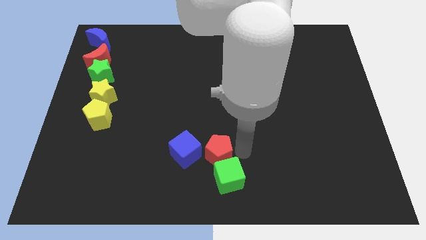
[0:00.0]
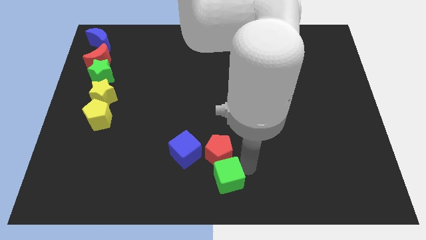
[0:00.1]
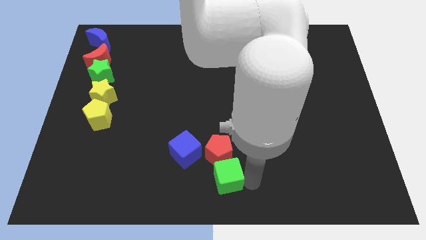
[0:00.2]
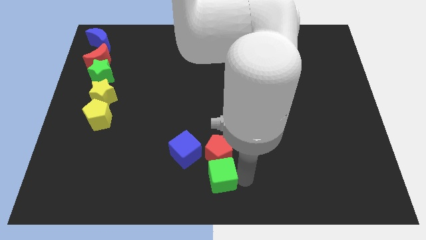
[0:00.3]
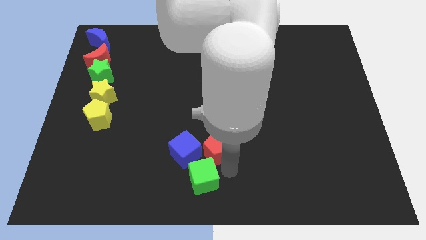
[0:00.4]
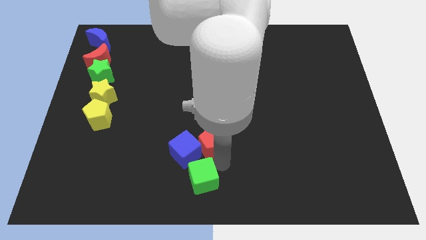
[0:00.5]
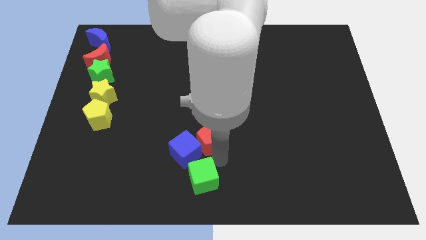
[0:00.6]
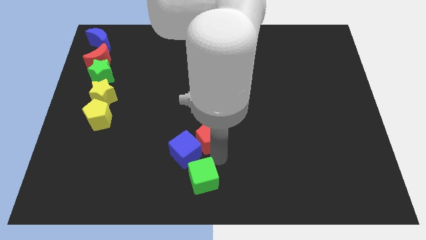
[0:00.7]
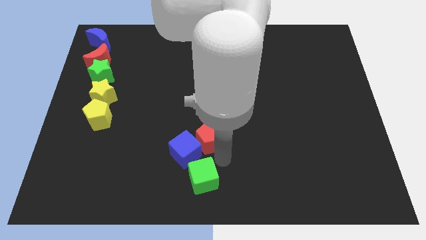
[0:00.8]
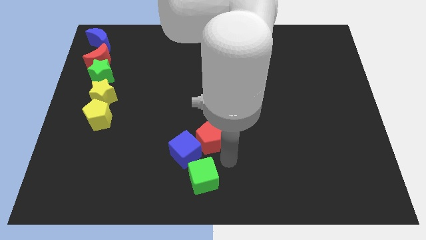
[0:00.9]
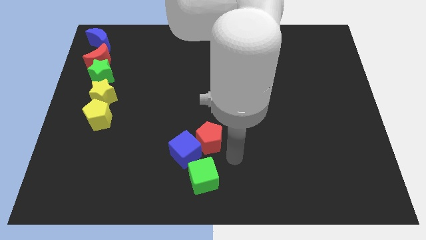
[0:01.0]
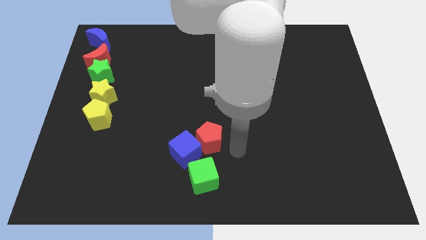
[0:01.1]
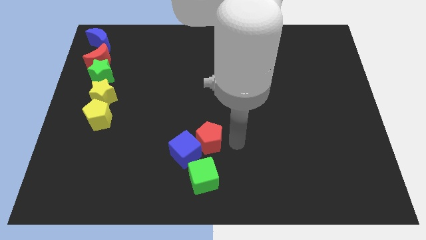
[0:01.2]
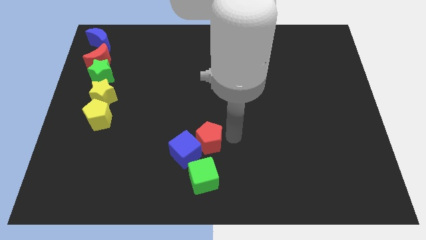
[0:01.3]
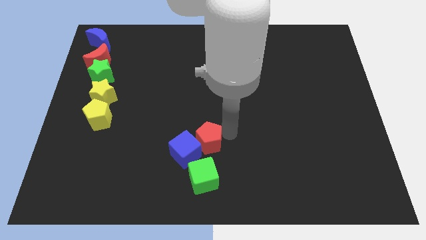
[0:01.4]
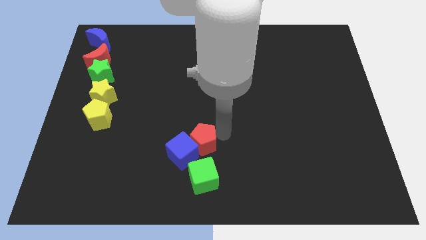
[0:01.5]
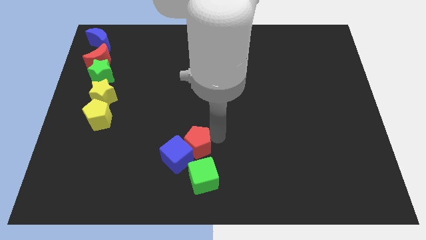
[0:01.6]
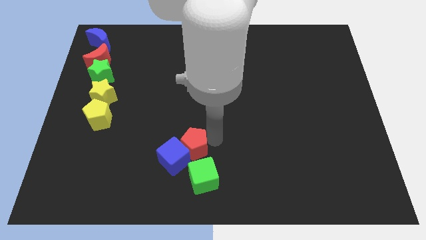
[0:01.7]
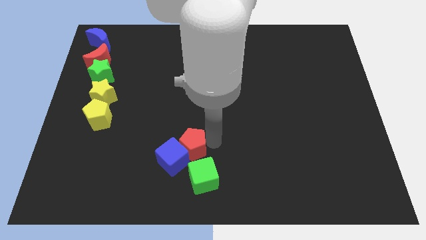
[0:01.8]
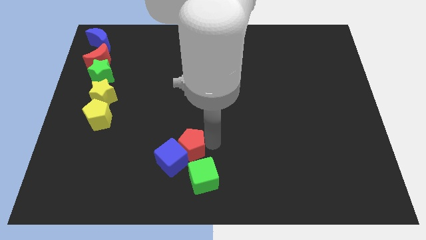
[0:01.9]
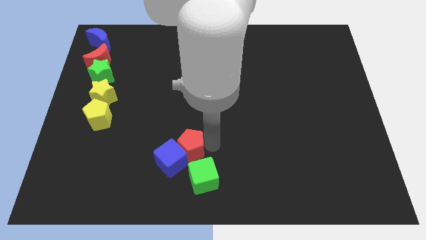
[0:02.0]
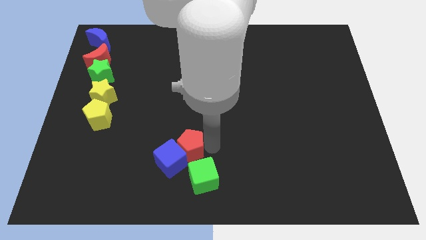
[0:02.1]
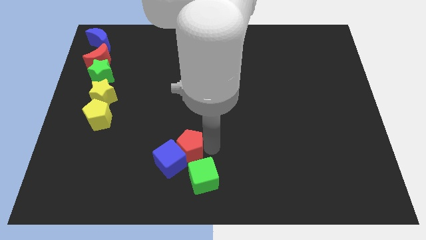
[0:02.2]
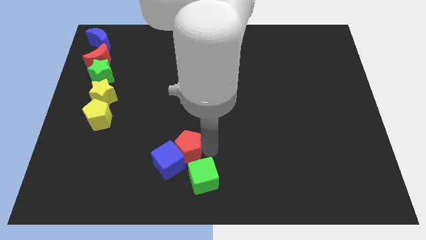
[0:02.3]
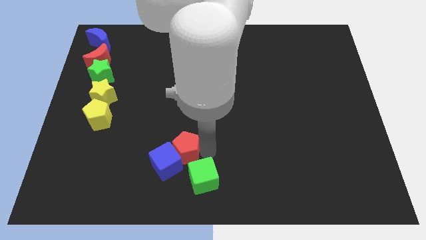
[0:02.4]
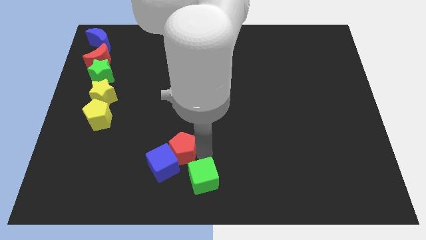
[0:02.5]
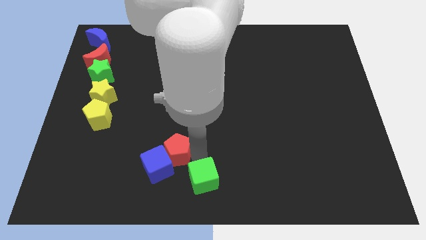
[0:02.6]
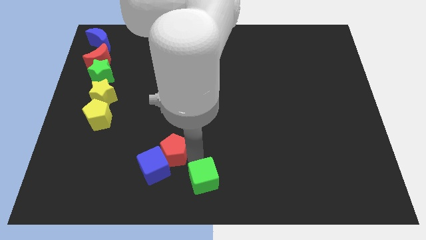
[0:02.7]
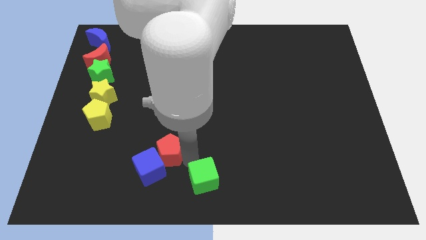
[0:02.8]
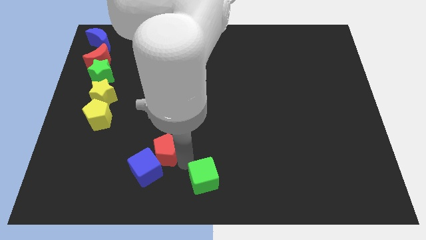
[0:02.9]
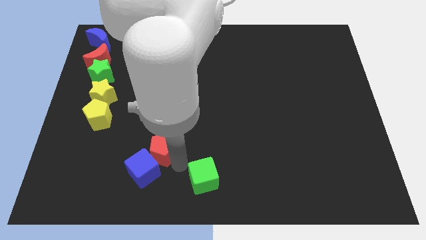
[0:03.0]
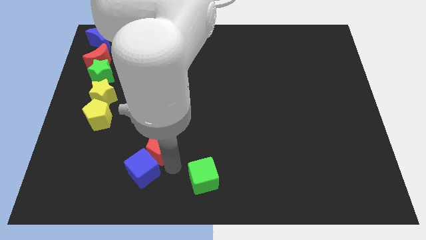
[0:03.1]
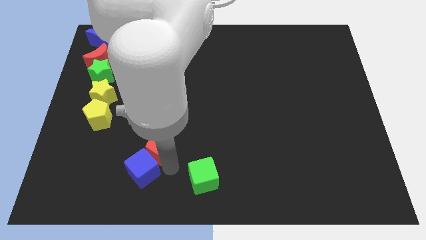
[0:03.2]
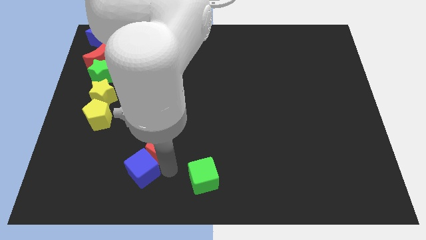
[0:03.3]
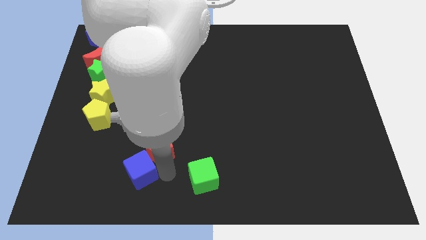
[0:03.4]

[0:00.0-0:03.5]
slide the red pentagon and the blue cube to the left

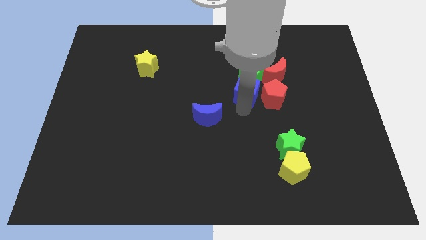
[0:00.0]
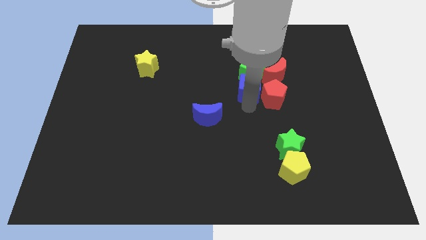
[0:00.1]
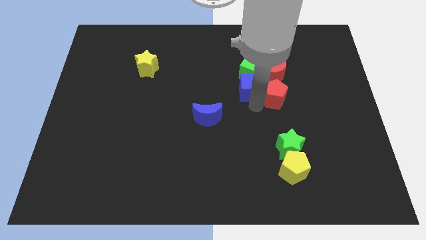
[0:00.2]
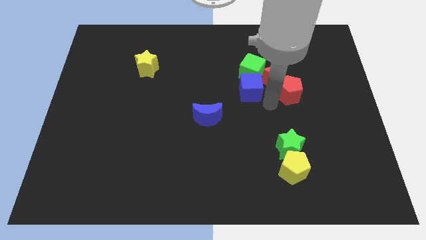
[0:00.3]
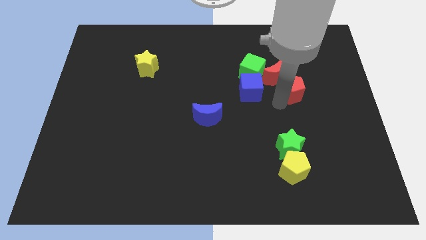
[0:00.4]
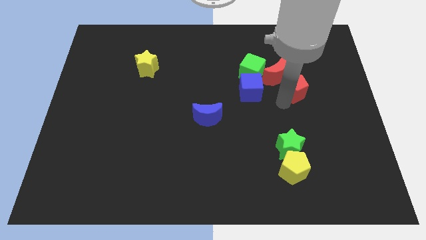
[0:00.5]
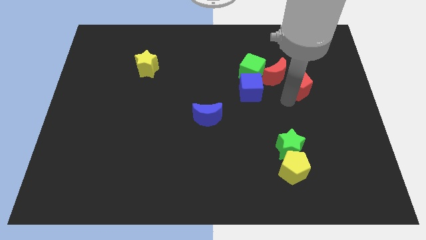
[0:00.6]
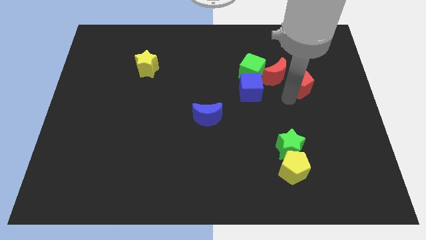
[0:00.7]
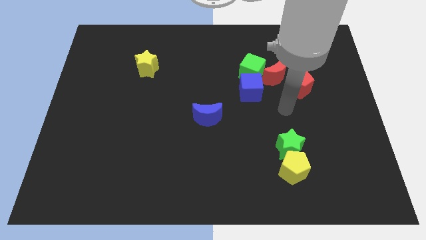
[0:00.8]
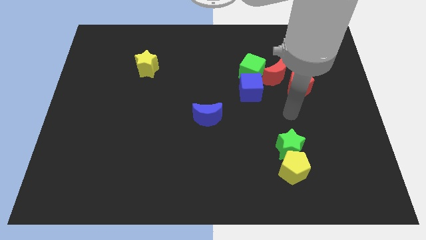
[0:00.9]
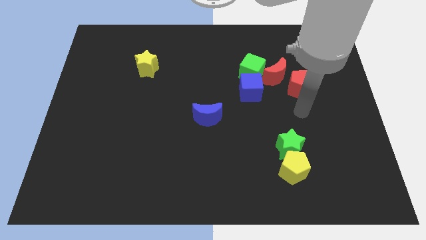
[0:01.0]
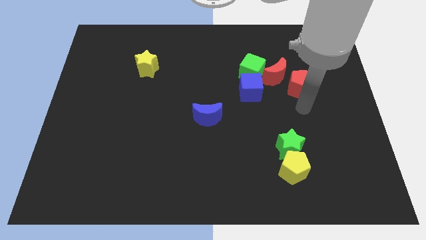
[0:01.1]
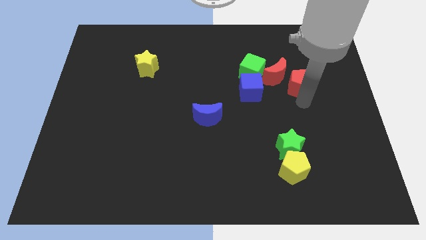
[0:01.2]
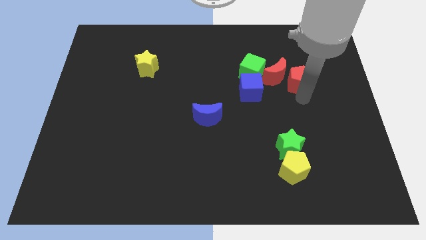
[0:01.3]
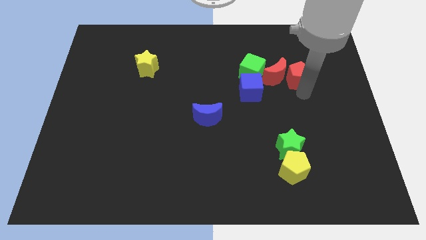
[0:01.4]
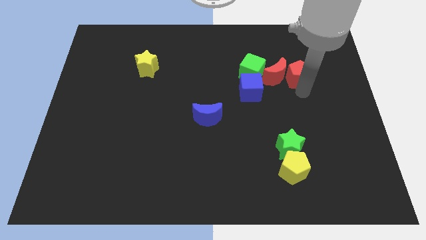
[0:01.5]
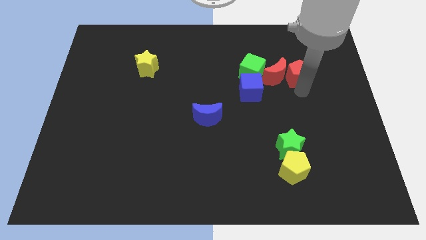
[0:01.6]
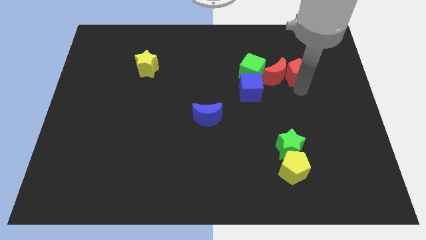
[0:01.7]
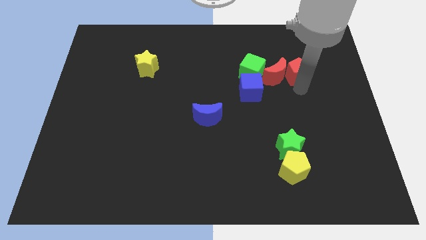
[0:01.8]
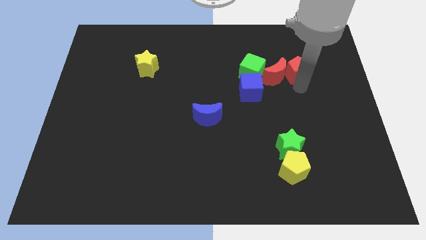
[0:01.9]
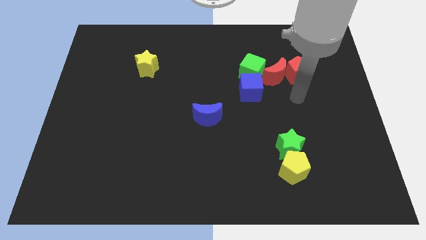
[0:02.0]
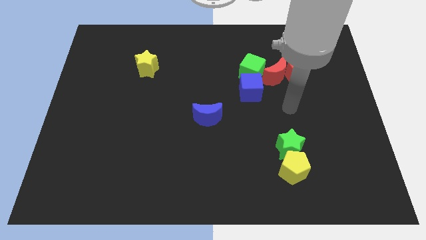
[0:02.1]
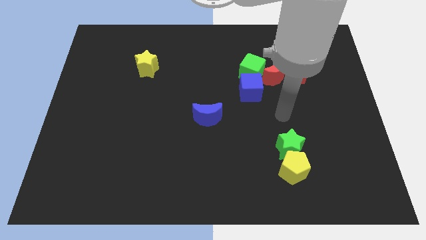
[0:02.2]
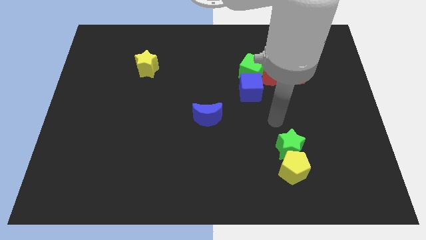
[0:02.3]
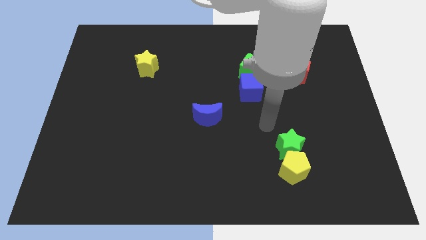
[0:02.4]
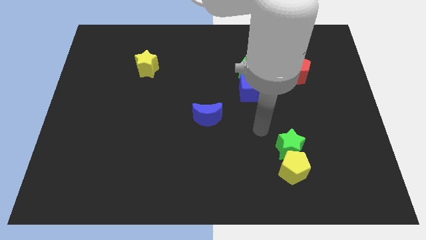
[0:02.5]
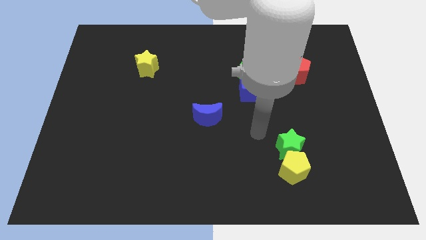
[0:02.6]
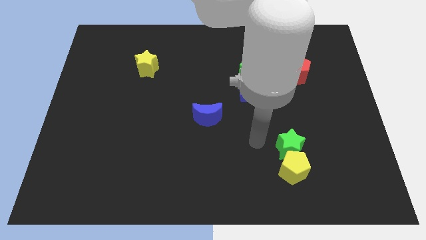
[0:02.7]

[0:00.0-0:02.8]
slide the red pentagon right of the red moon

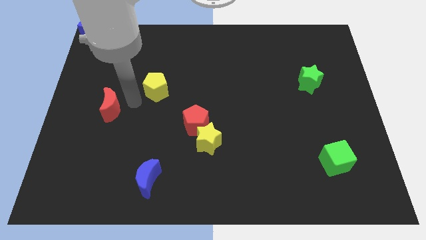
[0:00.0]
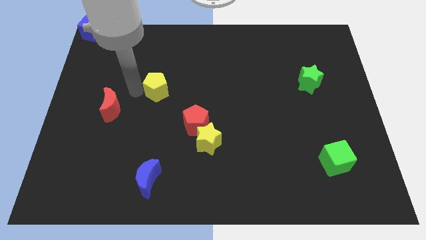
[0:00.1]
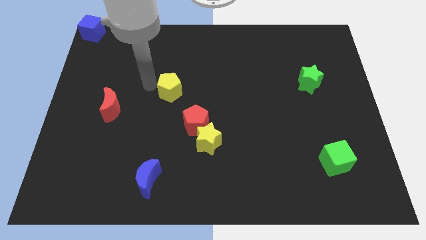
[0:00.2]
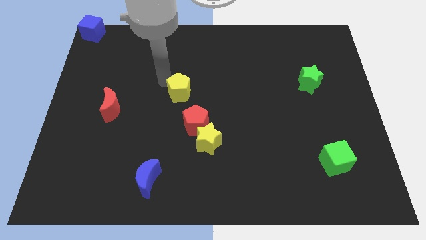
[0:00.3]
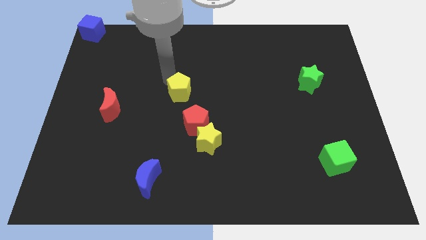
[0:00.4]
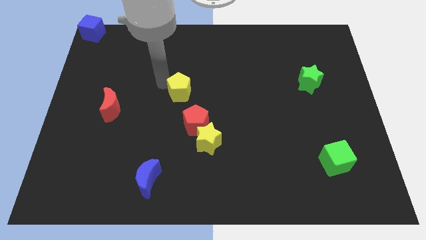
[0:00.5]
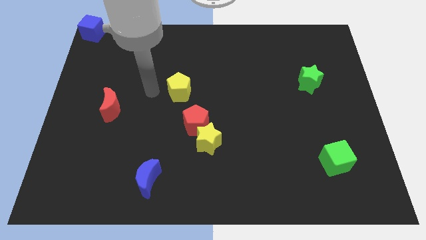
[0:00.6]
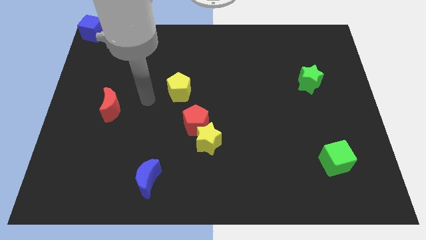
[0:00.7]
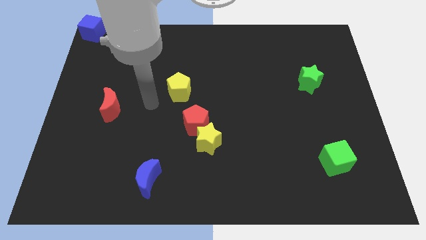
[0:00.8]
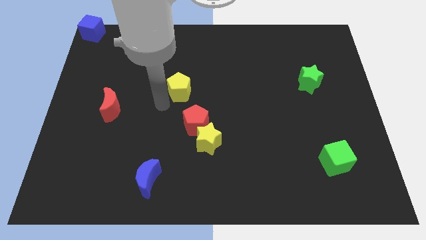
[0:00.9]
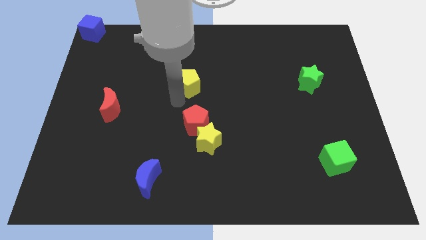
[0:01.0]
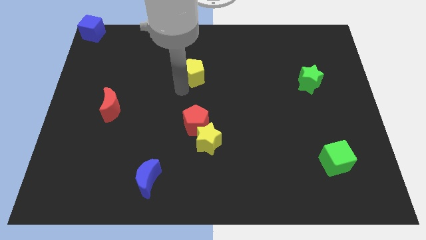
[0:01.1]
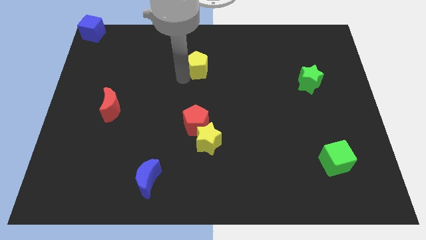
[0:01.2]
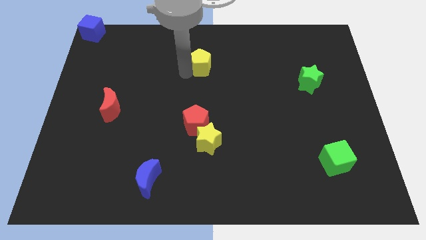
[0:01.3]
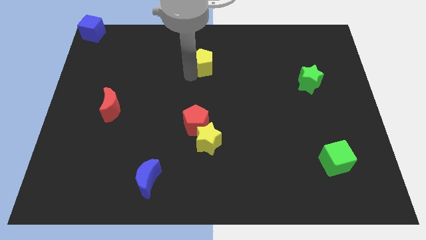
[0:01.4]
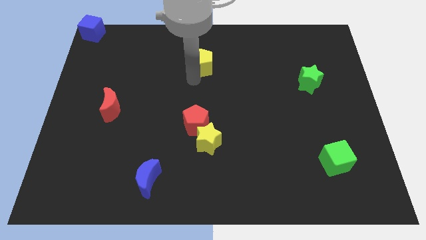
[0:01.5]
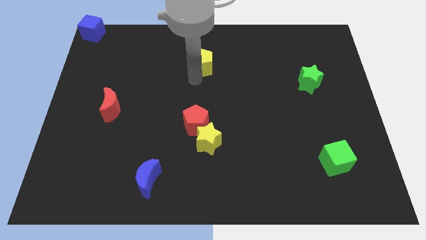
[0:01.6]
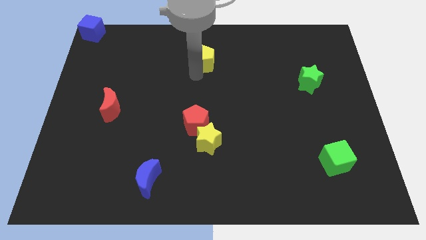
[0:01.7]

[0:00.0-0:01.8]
push the yellow pentagon towards the top center of the board

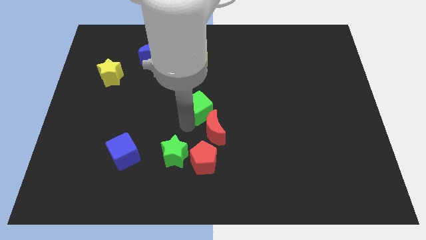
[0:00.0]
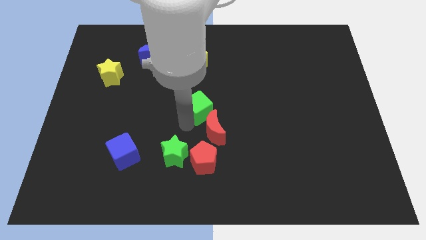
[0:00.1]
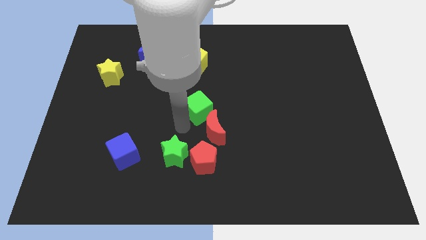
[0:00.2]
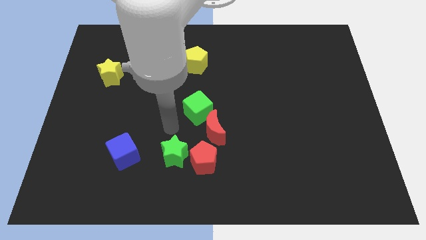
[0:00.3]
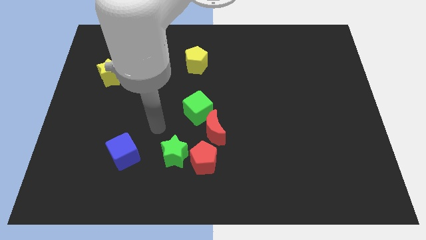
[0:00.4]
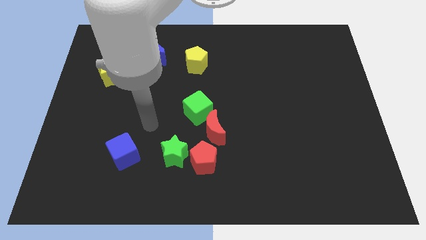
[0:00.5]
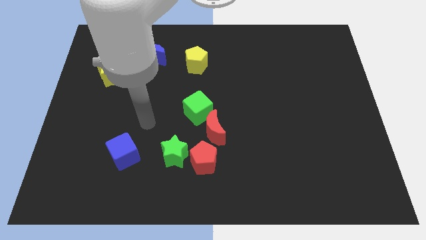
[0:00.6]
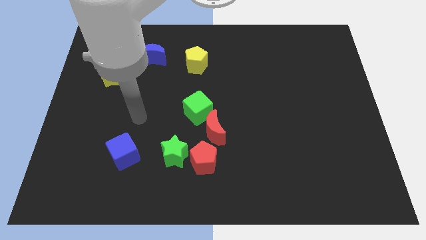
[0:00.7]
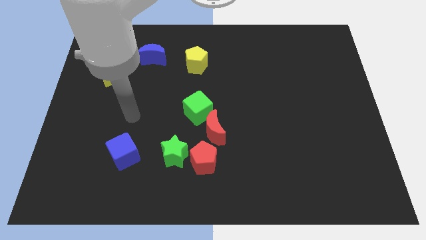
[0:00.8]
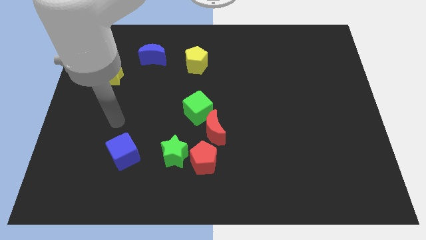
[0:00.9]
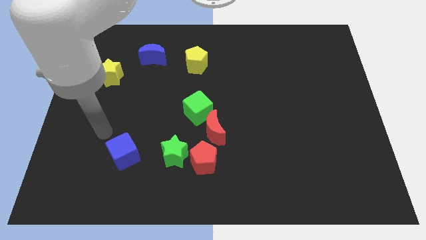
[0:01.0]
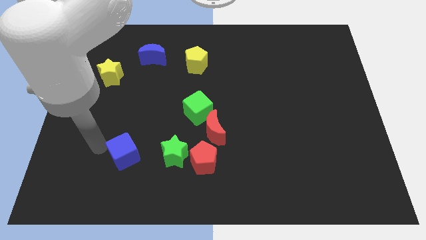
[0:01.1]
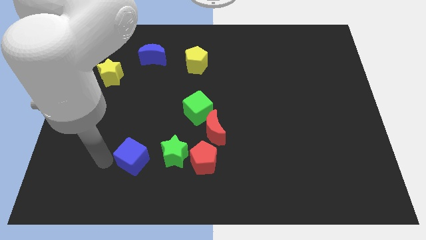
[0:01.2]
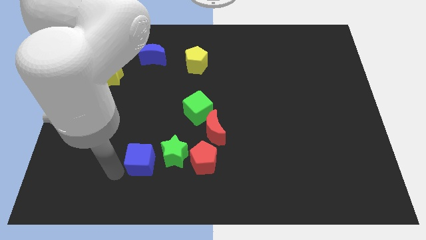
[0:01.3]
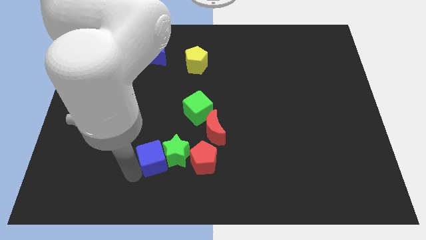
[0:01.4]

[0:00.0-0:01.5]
move blue cube left side of the green star
